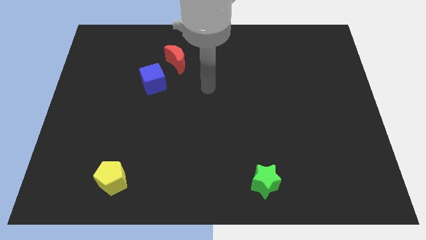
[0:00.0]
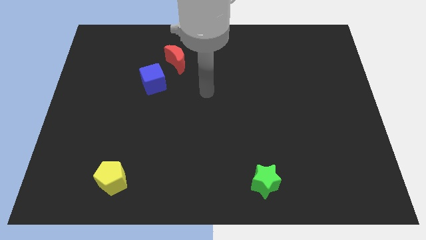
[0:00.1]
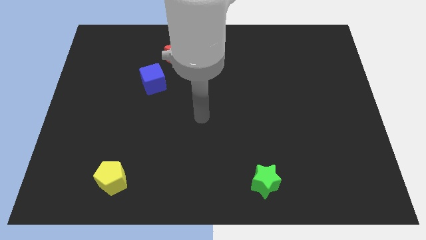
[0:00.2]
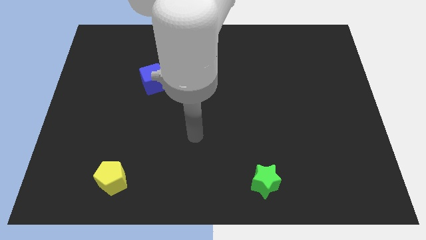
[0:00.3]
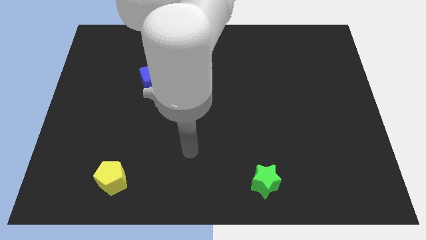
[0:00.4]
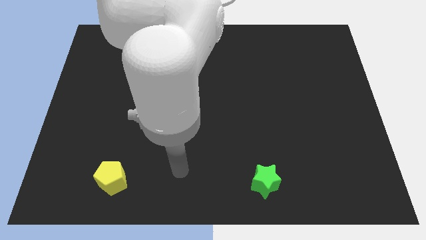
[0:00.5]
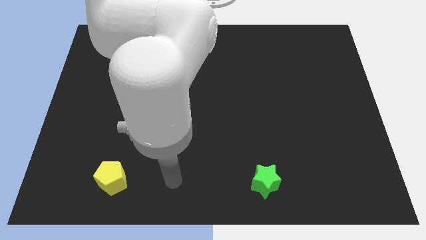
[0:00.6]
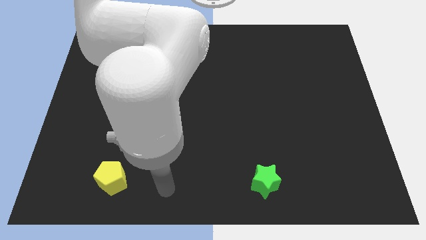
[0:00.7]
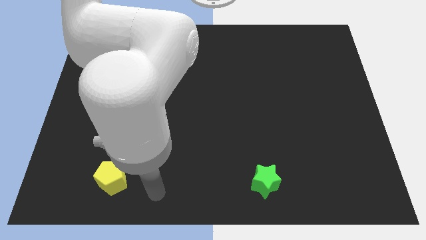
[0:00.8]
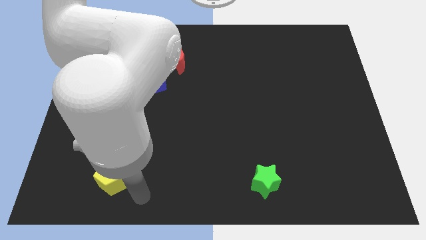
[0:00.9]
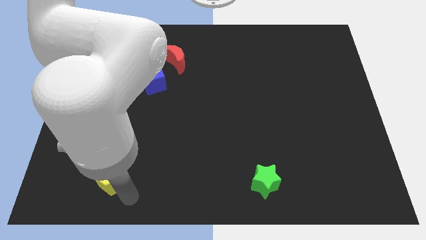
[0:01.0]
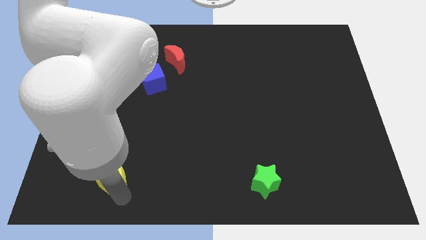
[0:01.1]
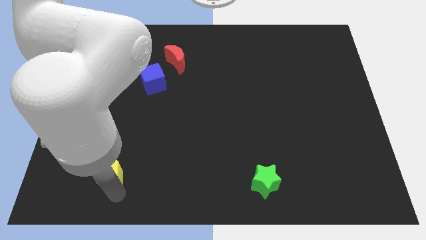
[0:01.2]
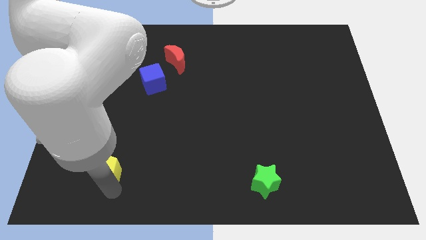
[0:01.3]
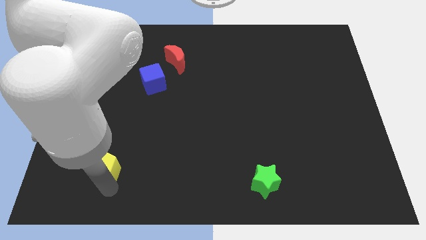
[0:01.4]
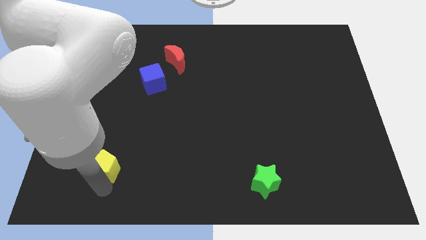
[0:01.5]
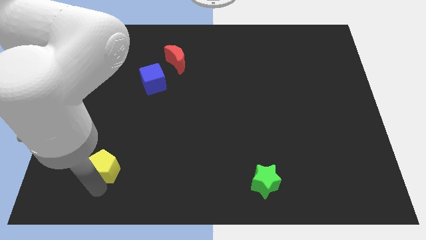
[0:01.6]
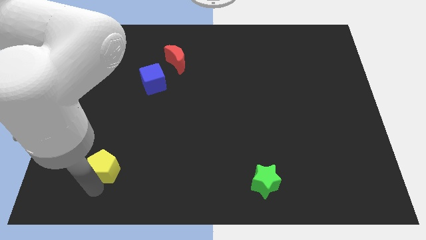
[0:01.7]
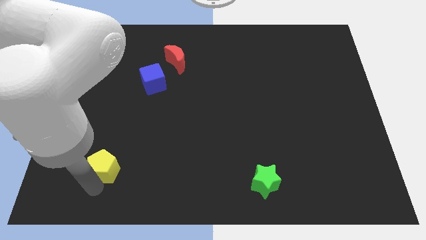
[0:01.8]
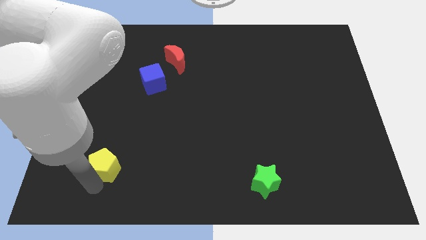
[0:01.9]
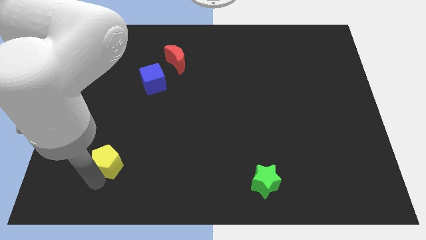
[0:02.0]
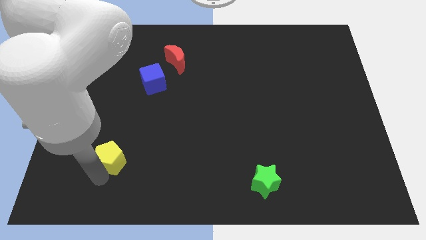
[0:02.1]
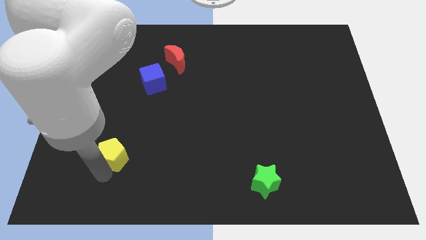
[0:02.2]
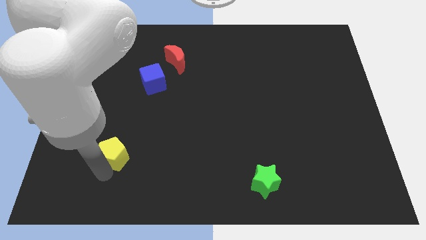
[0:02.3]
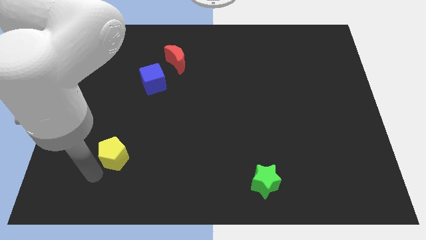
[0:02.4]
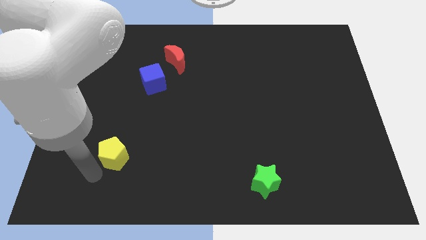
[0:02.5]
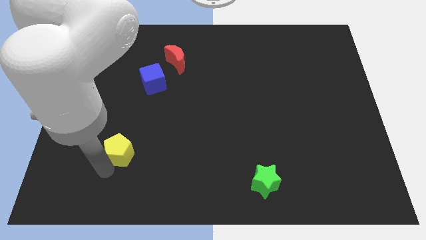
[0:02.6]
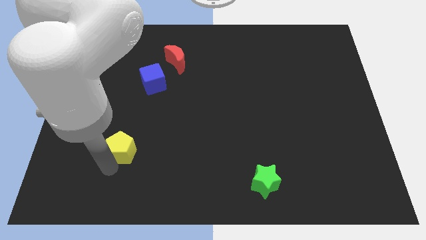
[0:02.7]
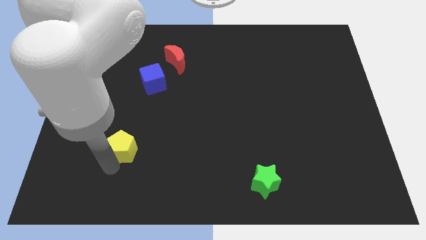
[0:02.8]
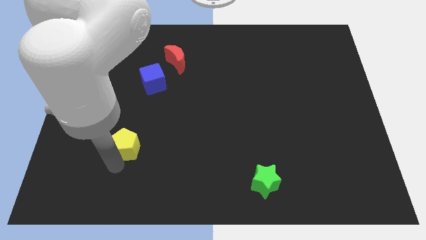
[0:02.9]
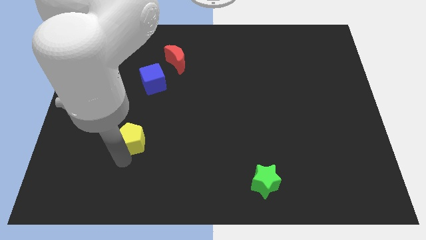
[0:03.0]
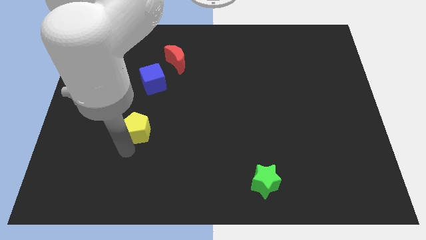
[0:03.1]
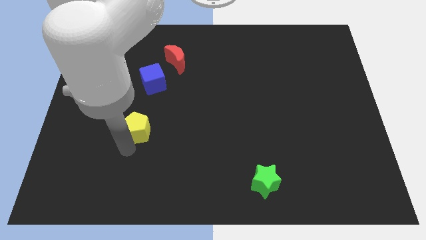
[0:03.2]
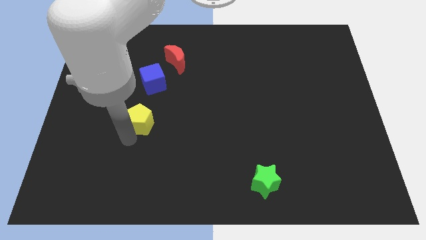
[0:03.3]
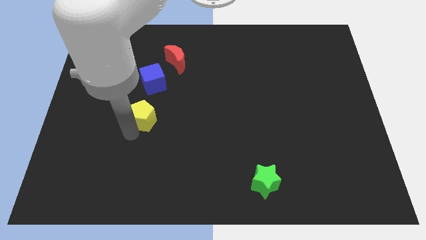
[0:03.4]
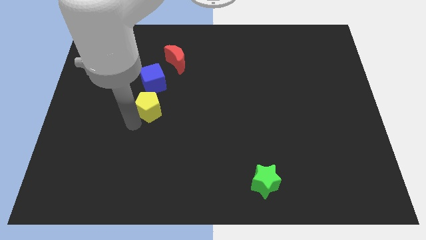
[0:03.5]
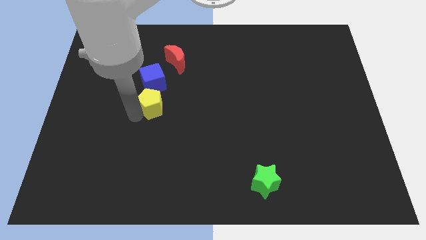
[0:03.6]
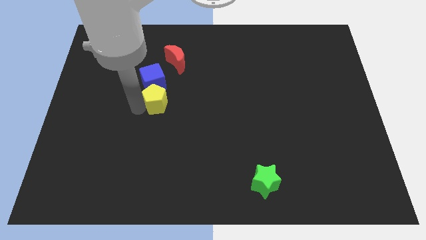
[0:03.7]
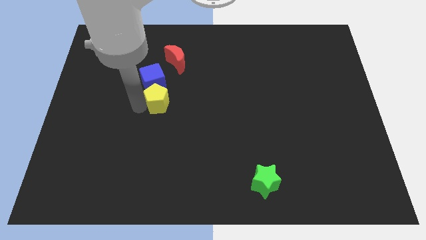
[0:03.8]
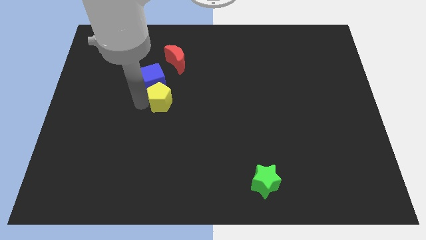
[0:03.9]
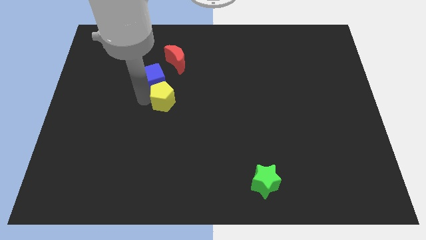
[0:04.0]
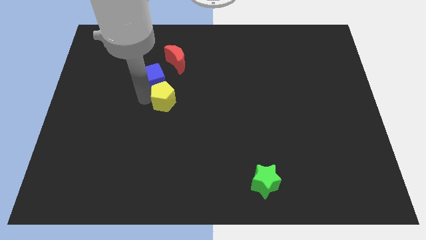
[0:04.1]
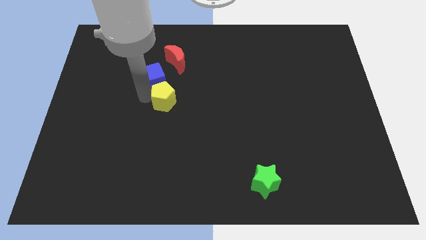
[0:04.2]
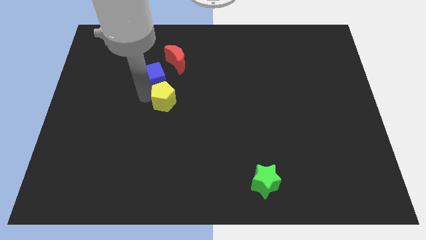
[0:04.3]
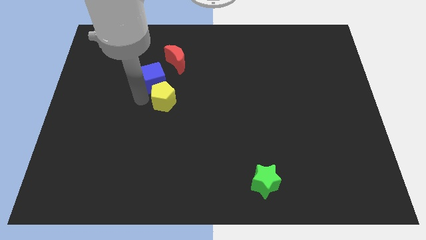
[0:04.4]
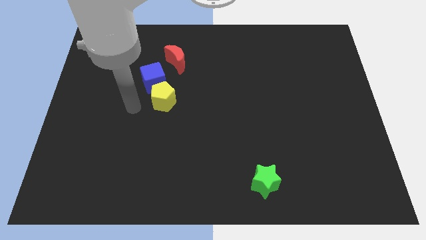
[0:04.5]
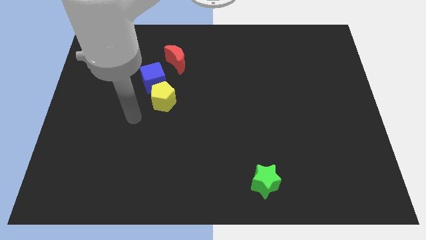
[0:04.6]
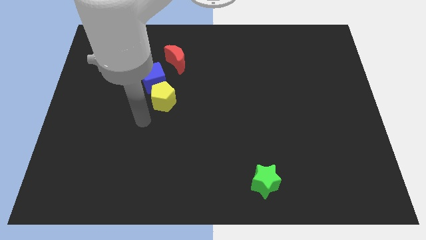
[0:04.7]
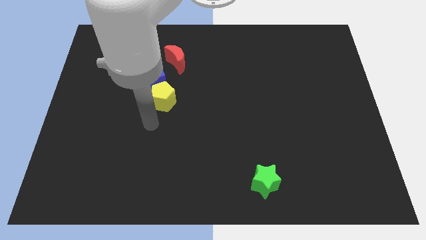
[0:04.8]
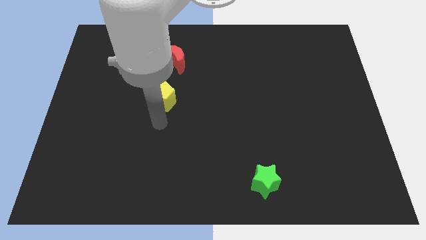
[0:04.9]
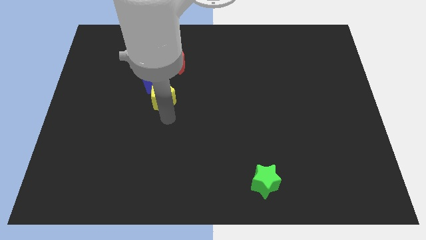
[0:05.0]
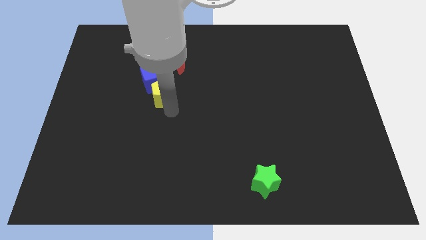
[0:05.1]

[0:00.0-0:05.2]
push the yellow block close to the blue cube

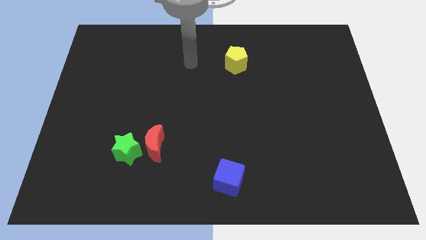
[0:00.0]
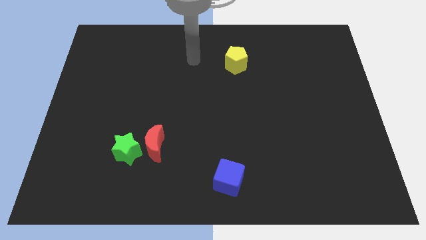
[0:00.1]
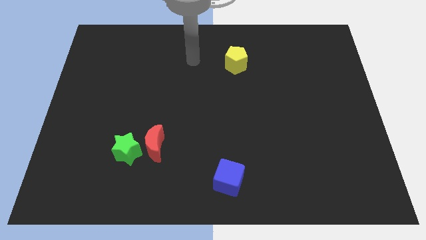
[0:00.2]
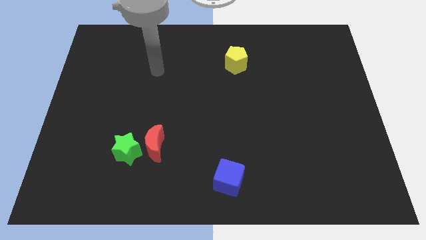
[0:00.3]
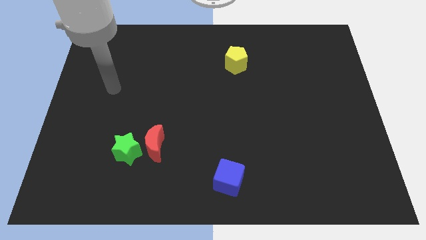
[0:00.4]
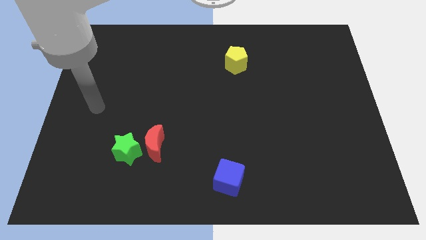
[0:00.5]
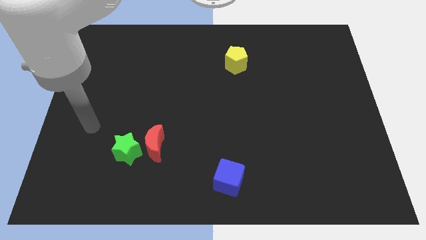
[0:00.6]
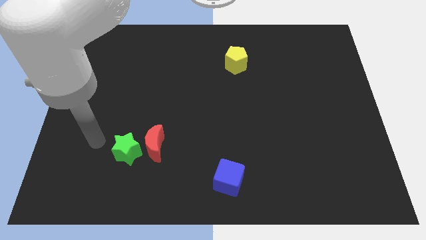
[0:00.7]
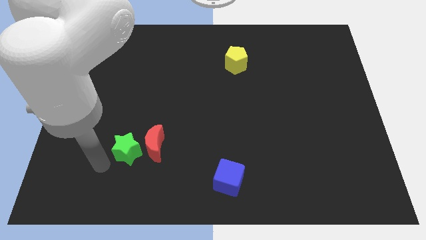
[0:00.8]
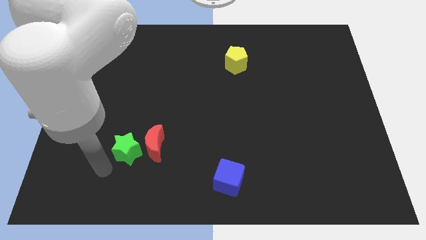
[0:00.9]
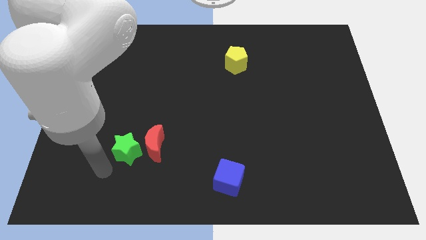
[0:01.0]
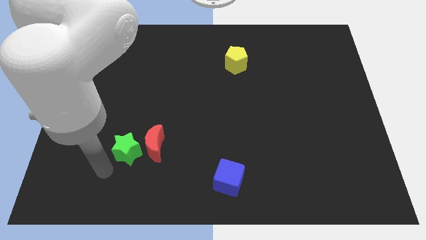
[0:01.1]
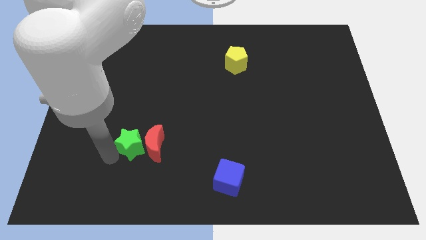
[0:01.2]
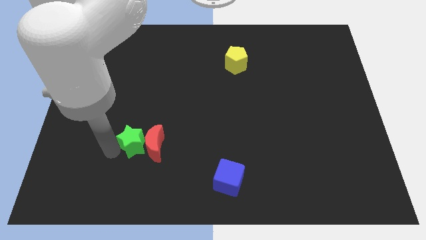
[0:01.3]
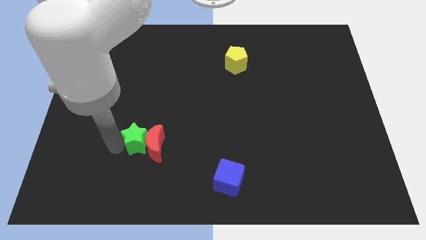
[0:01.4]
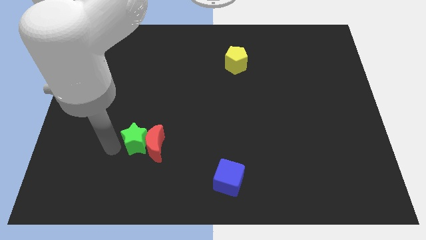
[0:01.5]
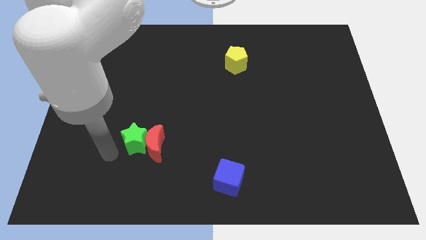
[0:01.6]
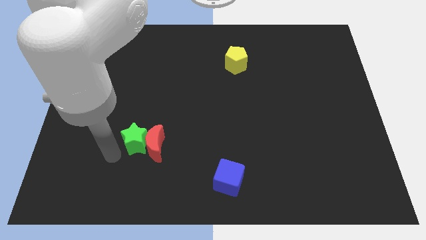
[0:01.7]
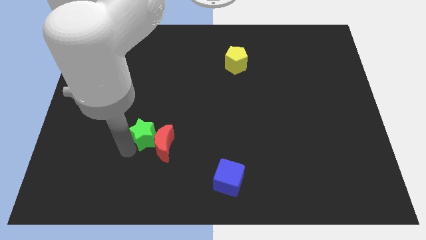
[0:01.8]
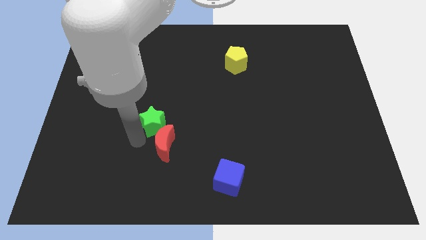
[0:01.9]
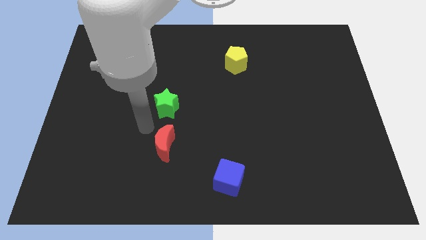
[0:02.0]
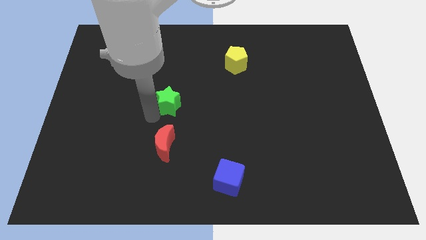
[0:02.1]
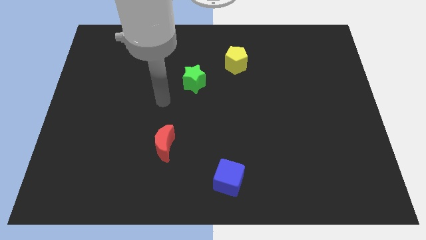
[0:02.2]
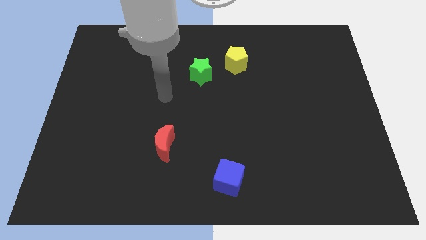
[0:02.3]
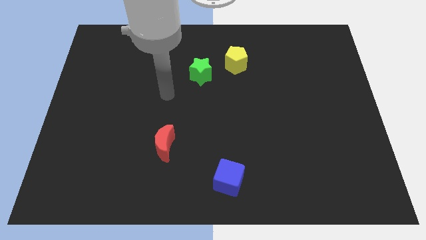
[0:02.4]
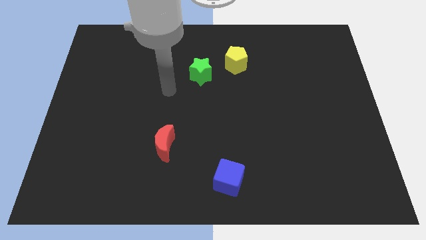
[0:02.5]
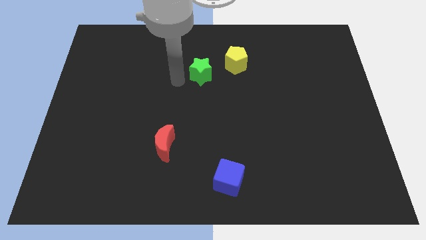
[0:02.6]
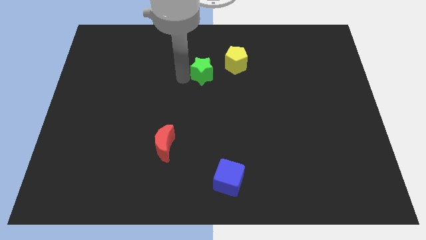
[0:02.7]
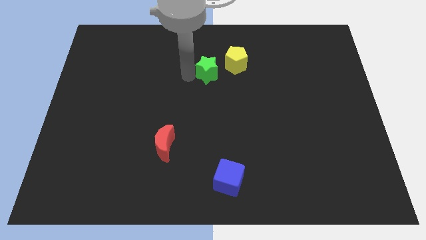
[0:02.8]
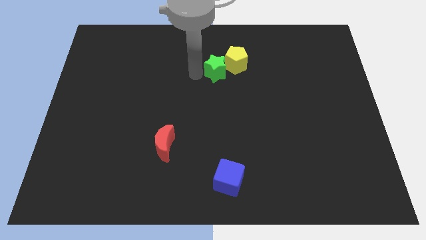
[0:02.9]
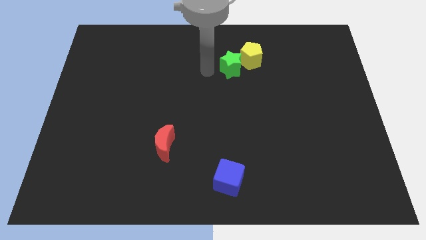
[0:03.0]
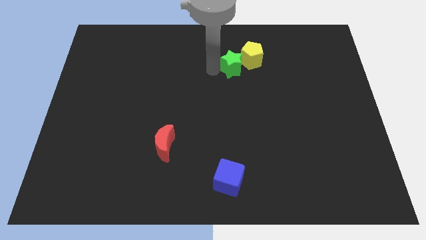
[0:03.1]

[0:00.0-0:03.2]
push the green block close to the yellow block

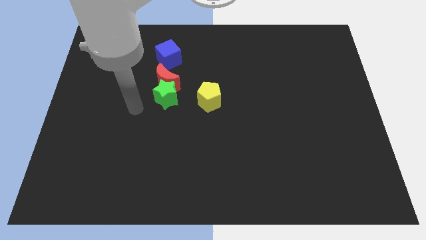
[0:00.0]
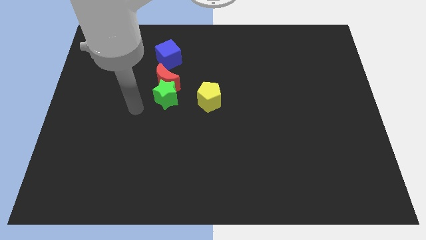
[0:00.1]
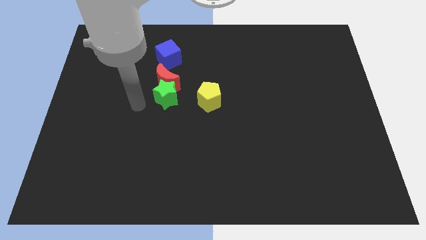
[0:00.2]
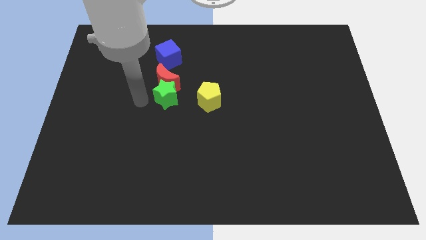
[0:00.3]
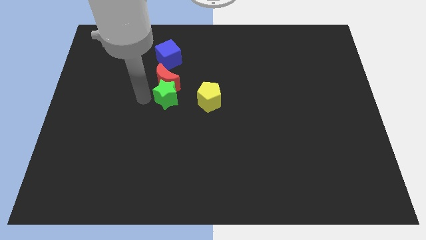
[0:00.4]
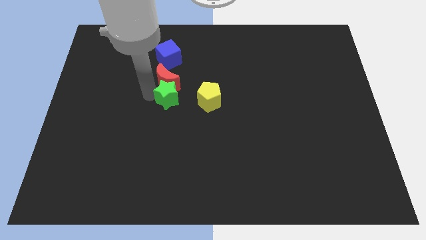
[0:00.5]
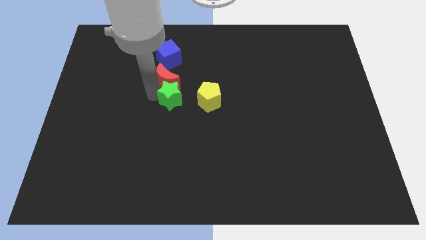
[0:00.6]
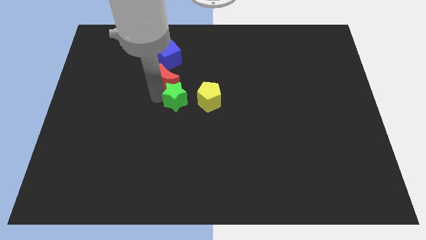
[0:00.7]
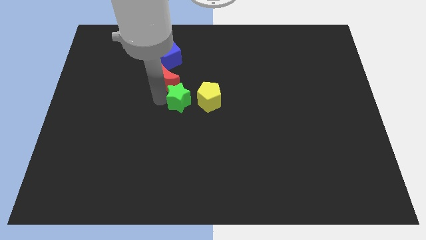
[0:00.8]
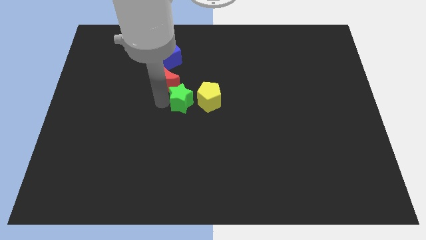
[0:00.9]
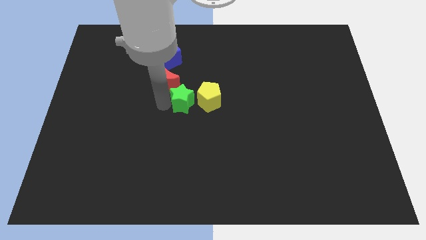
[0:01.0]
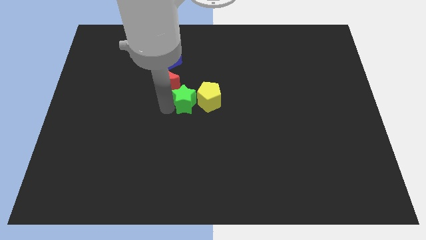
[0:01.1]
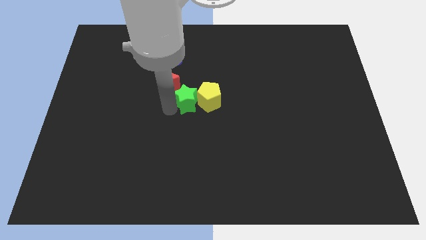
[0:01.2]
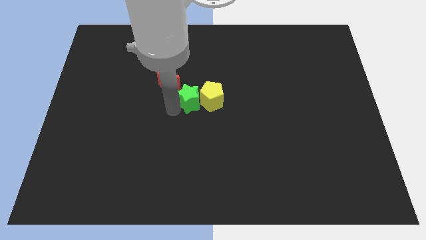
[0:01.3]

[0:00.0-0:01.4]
slide the green block next to the yellow pentagon
